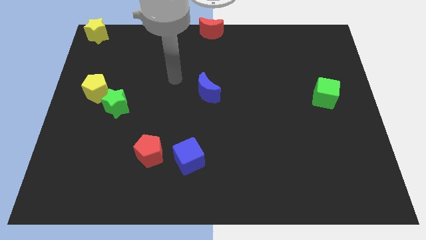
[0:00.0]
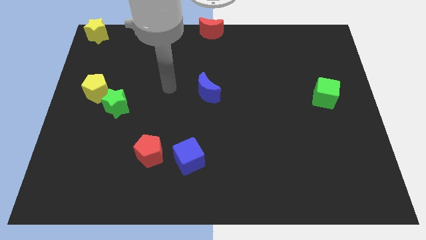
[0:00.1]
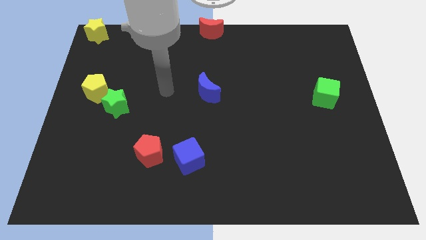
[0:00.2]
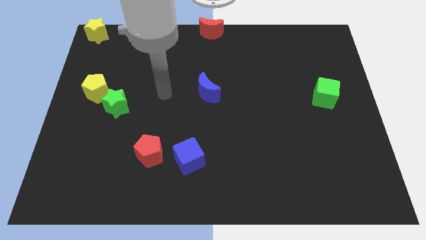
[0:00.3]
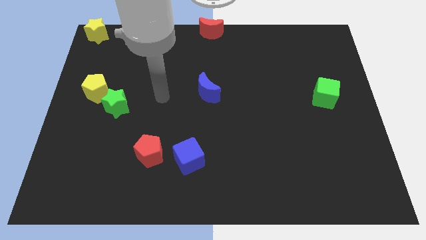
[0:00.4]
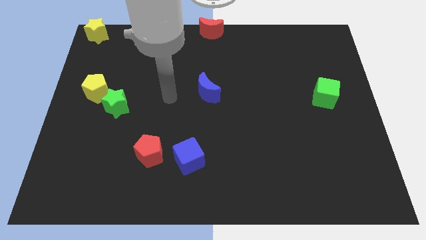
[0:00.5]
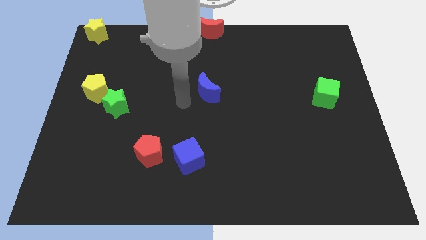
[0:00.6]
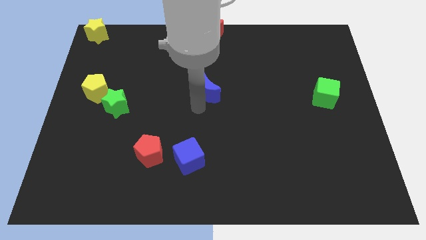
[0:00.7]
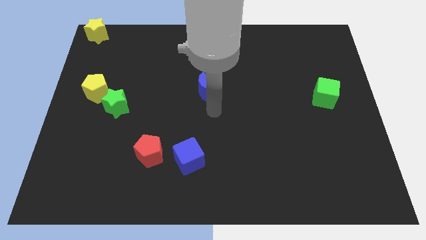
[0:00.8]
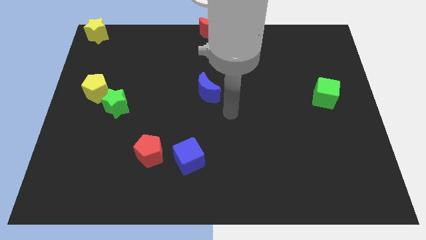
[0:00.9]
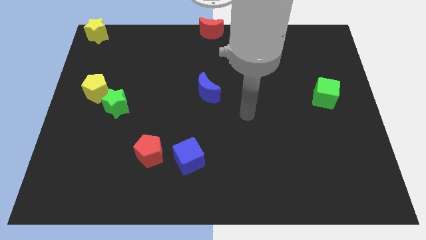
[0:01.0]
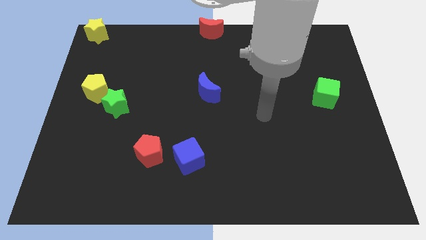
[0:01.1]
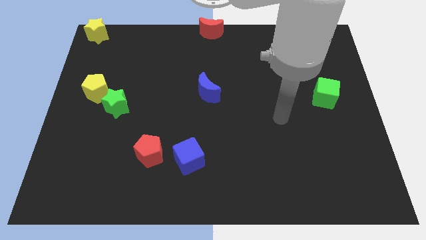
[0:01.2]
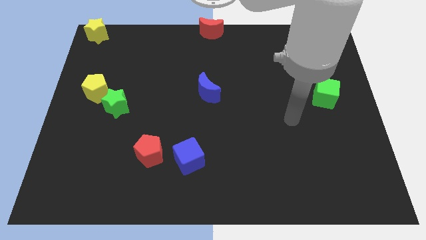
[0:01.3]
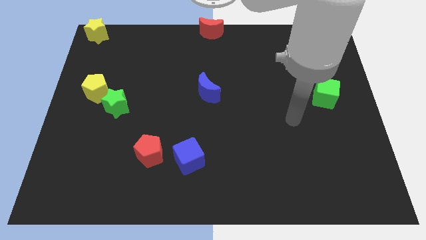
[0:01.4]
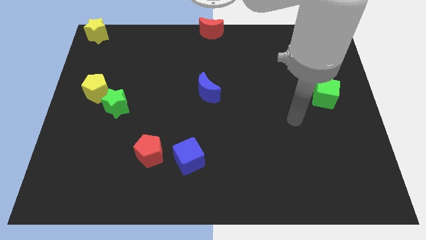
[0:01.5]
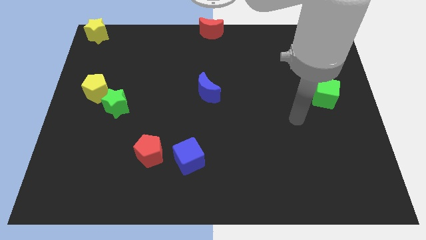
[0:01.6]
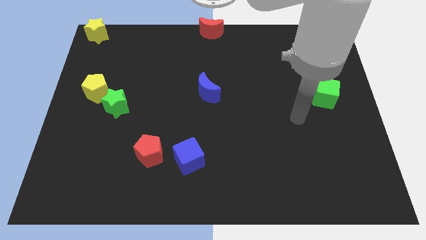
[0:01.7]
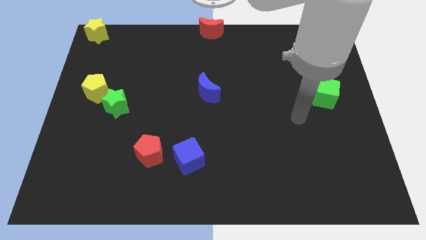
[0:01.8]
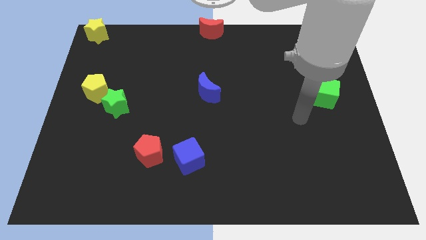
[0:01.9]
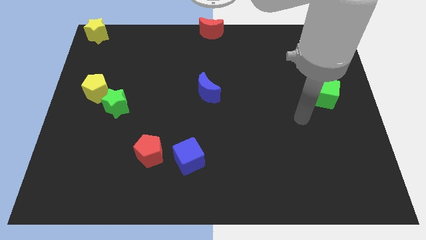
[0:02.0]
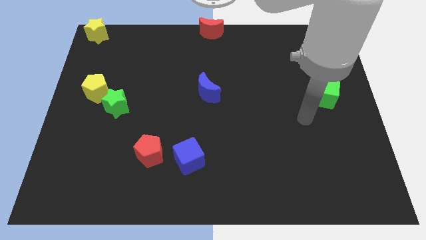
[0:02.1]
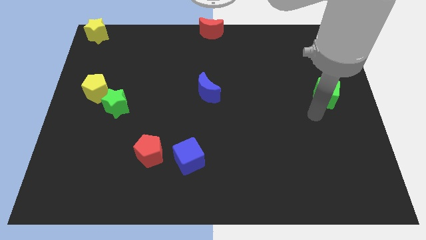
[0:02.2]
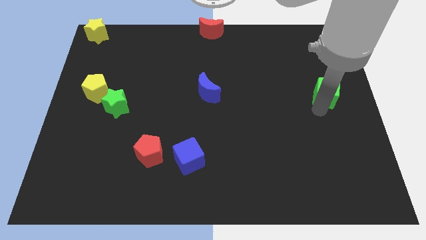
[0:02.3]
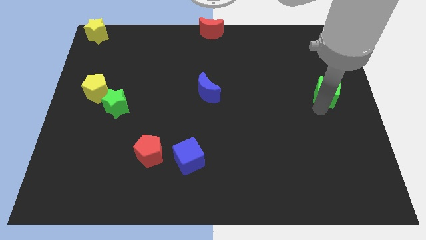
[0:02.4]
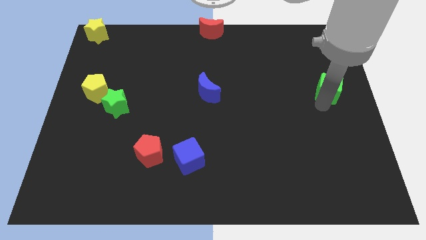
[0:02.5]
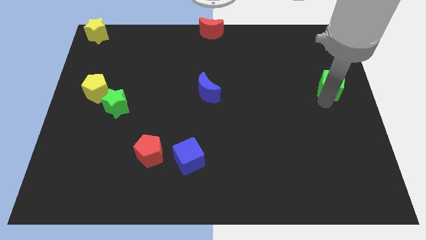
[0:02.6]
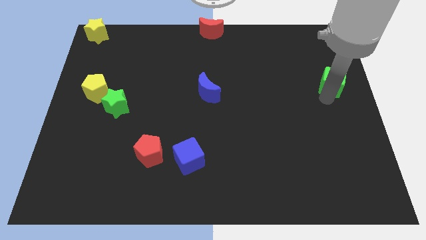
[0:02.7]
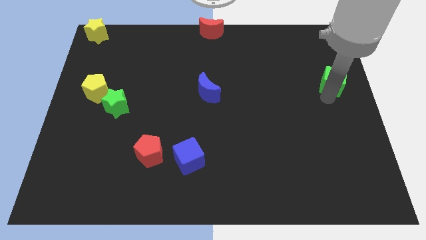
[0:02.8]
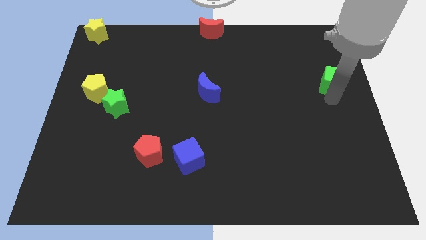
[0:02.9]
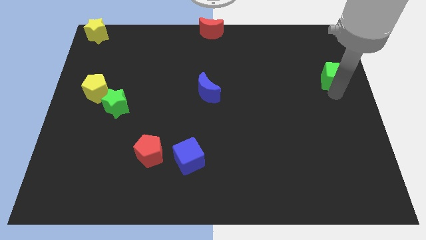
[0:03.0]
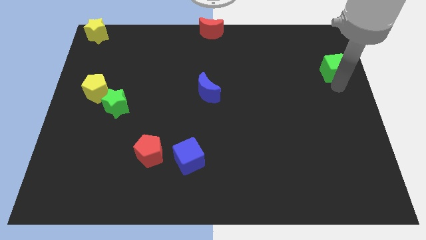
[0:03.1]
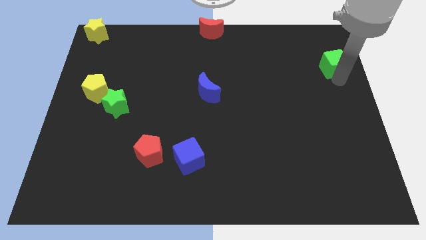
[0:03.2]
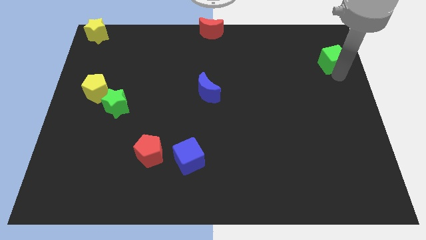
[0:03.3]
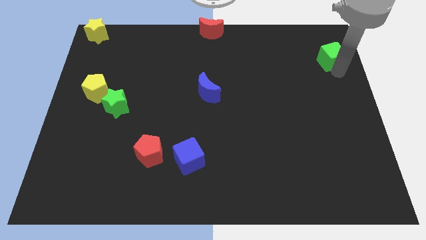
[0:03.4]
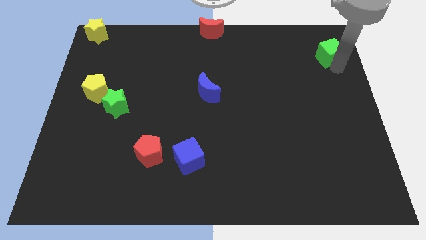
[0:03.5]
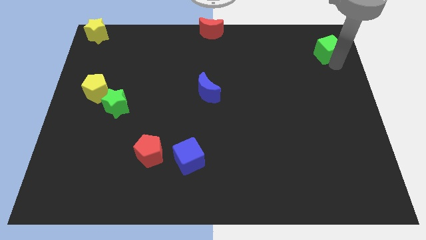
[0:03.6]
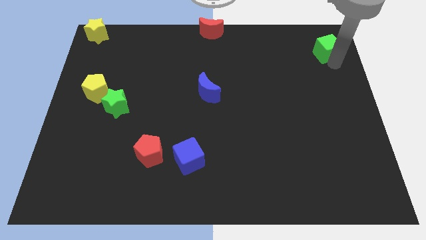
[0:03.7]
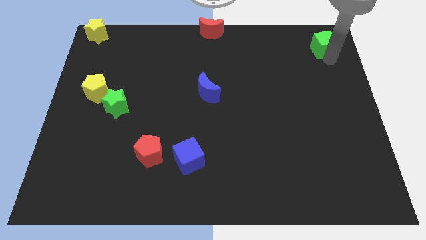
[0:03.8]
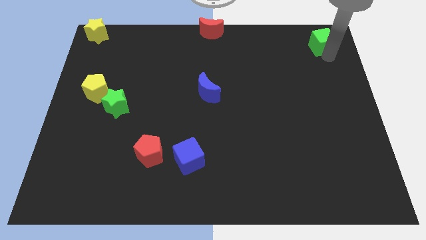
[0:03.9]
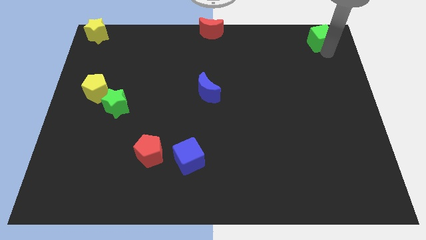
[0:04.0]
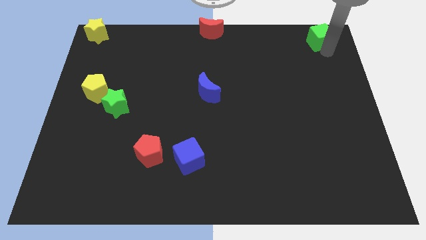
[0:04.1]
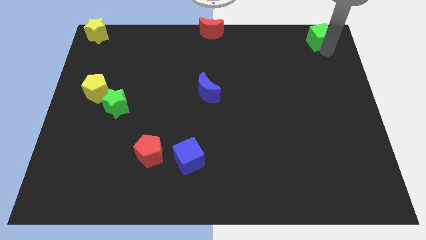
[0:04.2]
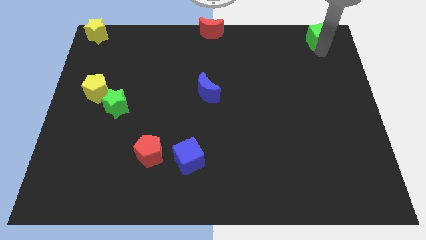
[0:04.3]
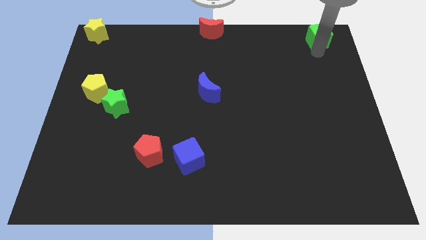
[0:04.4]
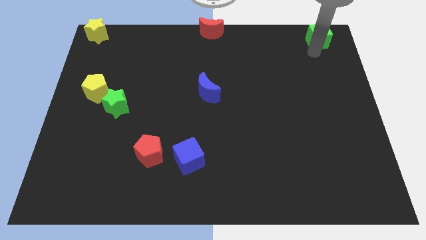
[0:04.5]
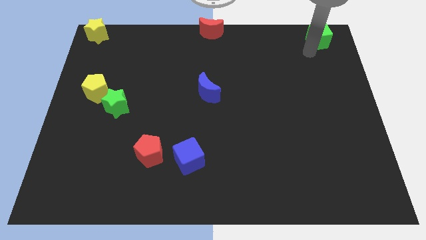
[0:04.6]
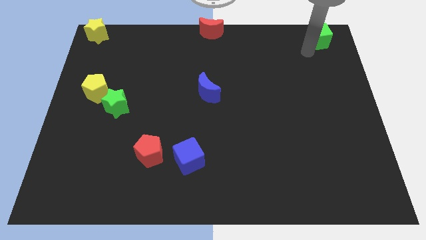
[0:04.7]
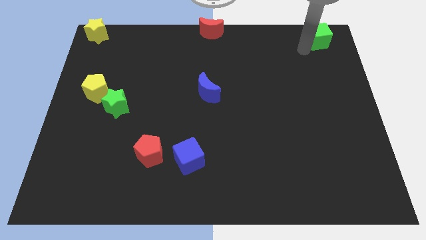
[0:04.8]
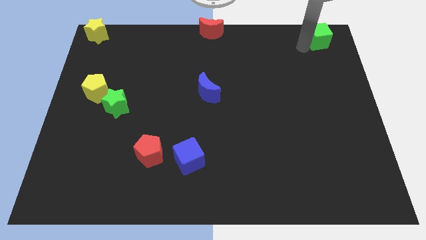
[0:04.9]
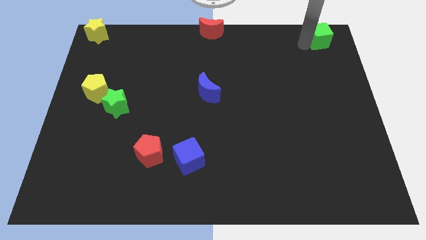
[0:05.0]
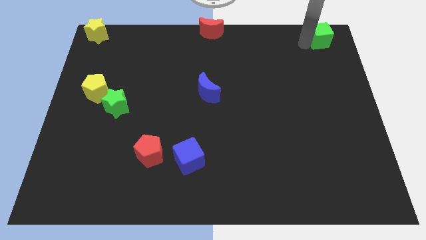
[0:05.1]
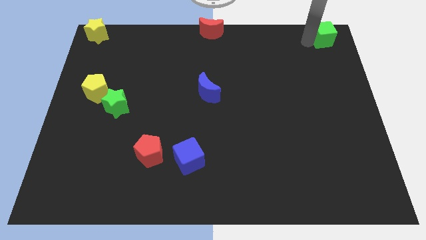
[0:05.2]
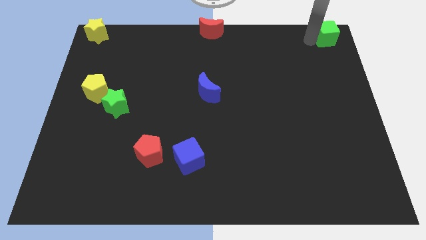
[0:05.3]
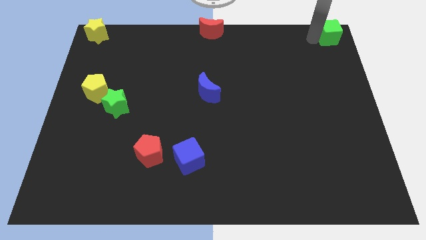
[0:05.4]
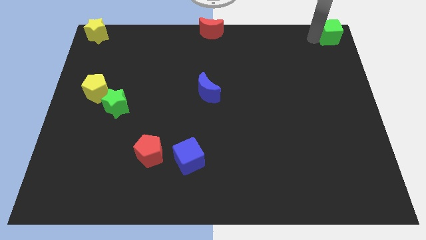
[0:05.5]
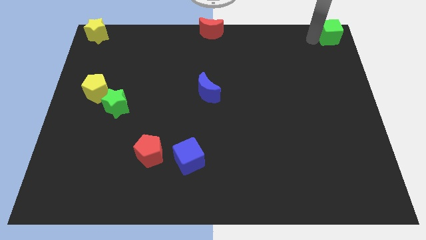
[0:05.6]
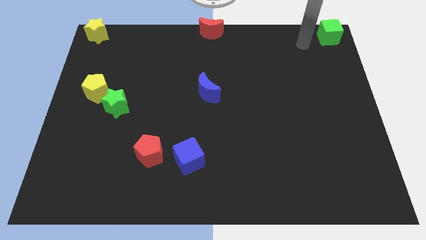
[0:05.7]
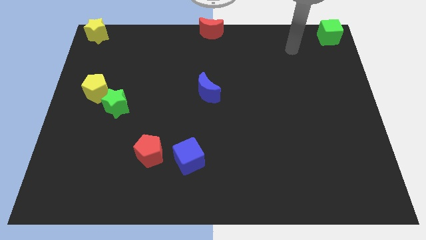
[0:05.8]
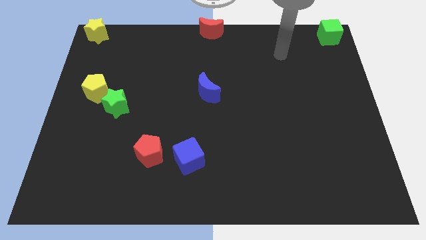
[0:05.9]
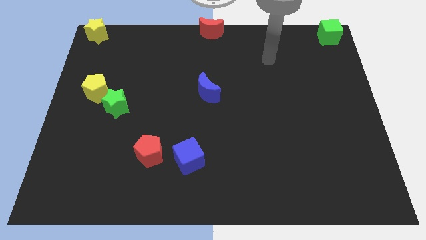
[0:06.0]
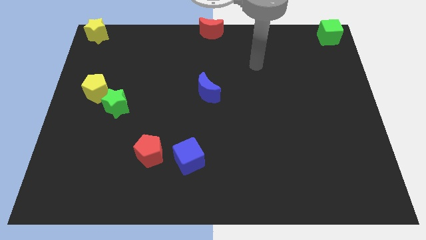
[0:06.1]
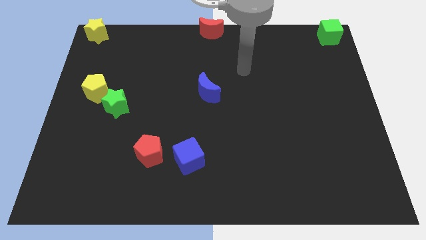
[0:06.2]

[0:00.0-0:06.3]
push the green cube to the top right corner

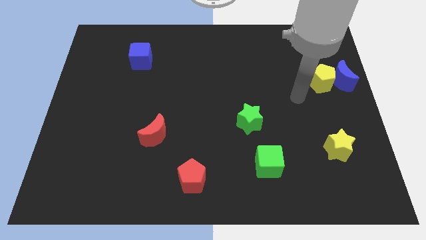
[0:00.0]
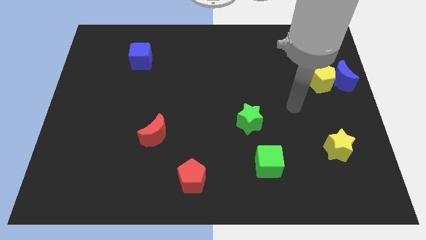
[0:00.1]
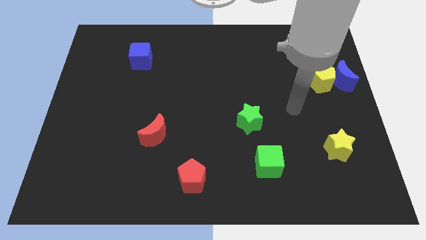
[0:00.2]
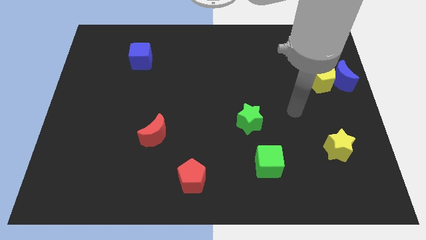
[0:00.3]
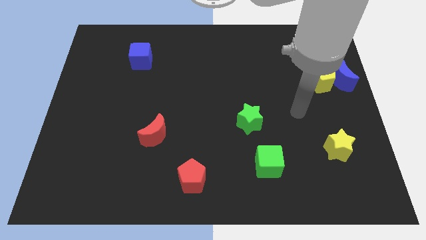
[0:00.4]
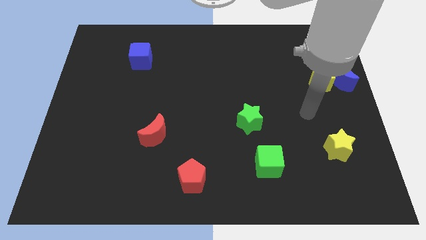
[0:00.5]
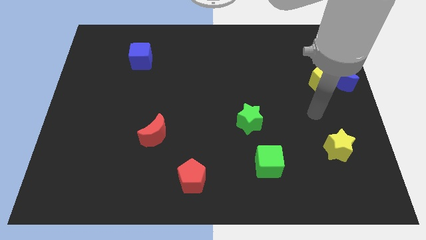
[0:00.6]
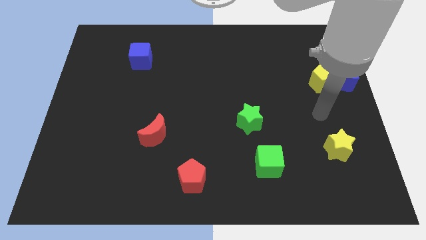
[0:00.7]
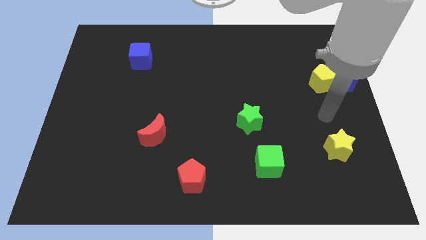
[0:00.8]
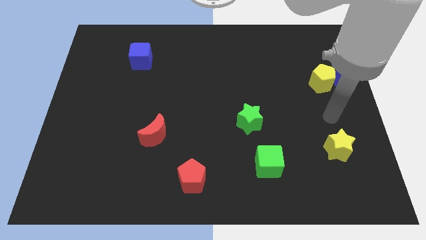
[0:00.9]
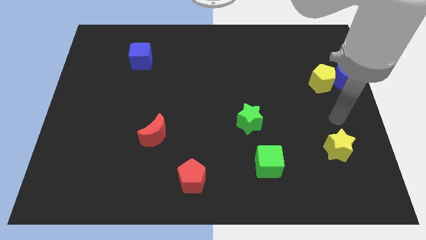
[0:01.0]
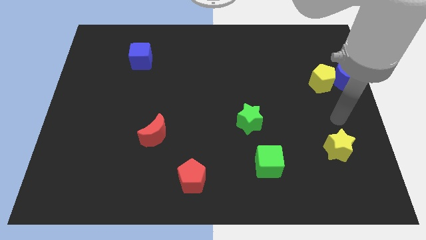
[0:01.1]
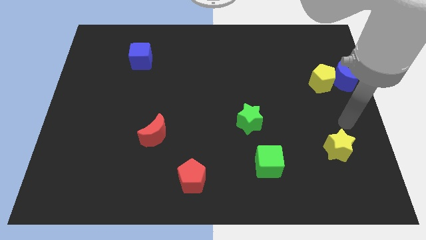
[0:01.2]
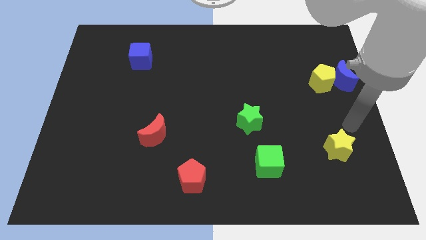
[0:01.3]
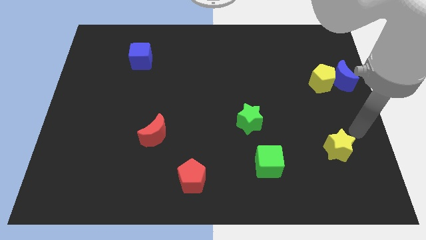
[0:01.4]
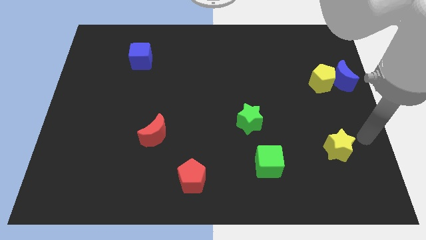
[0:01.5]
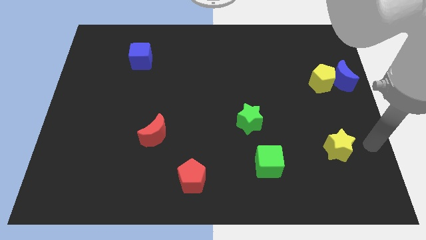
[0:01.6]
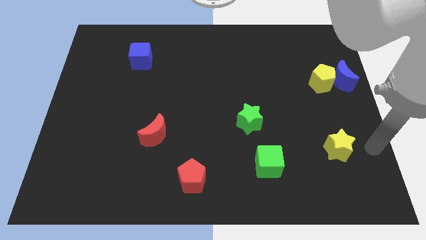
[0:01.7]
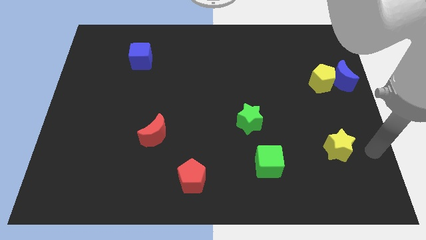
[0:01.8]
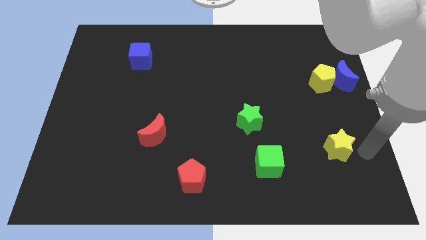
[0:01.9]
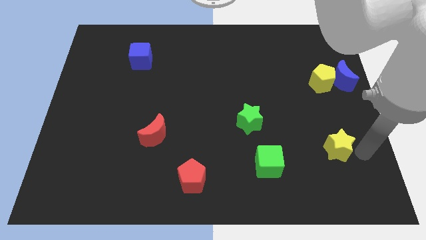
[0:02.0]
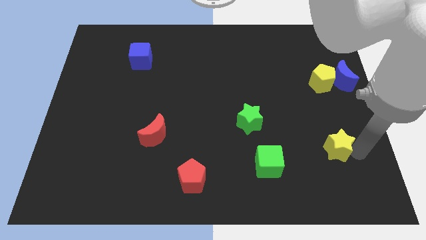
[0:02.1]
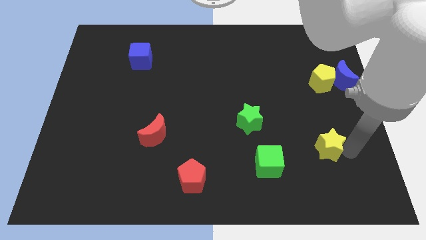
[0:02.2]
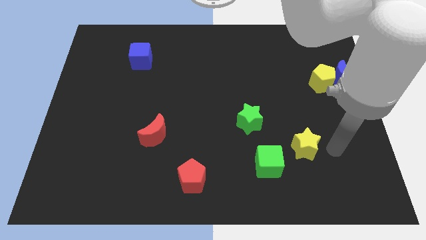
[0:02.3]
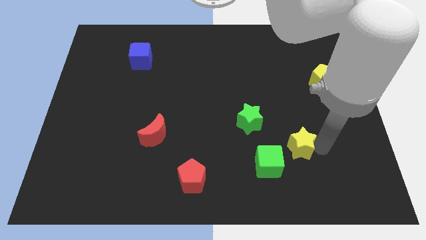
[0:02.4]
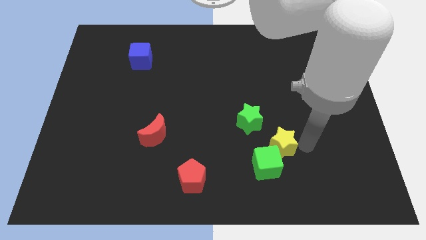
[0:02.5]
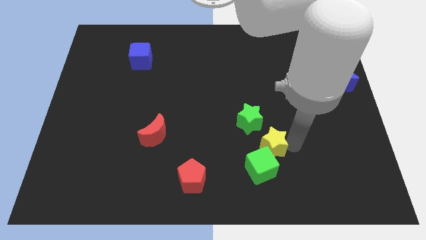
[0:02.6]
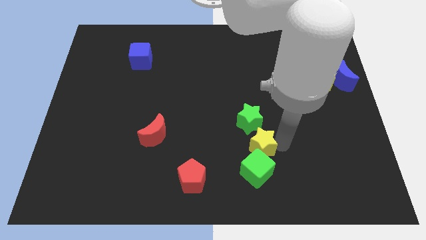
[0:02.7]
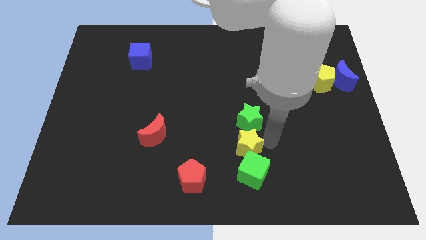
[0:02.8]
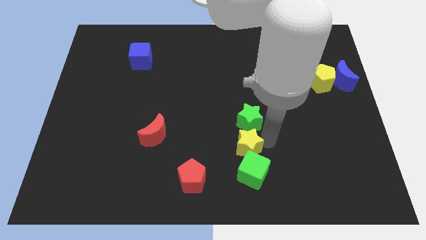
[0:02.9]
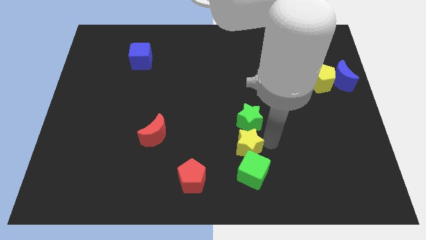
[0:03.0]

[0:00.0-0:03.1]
place the yellow star in between the green blocks
